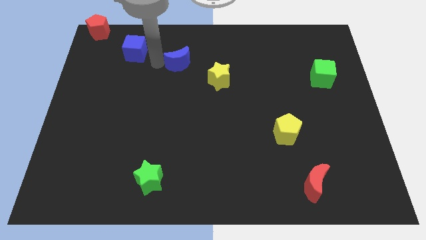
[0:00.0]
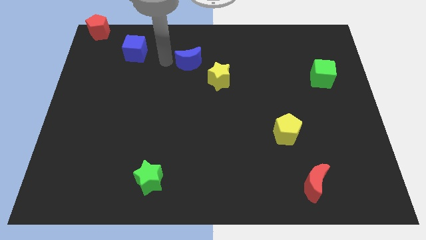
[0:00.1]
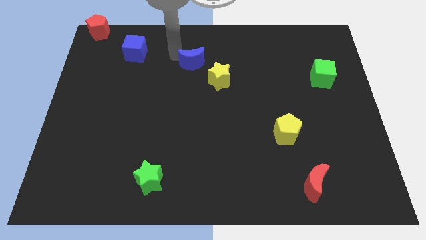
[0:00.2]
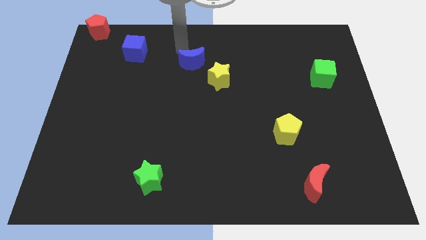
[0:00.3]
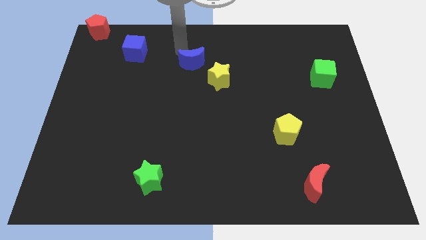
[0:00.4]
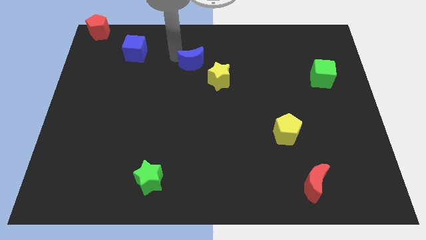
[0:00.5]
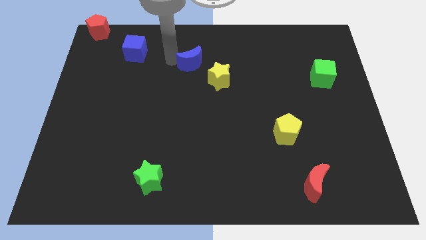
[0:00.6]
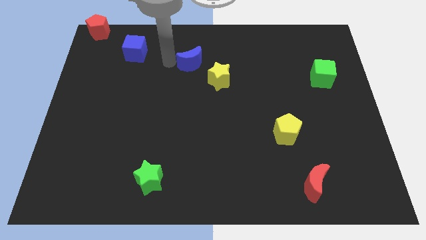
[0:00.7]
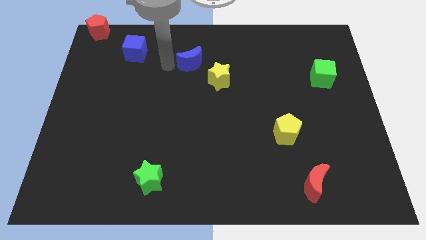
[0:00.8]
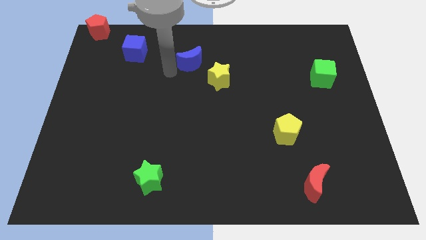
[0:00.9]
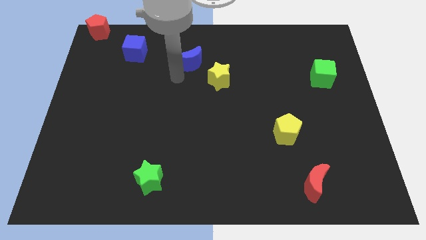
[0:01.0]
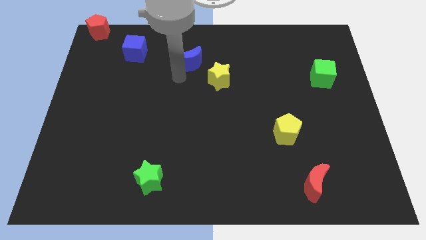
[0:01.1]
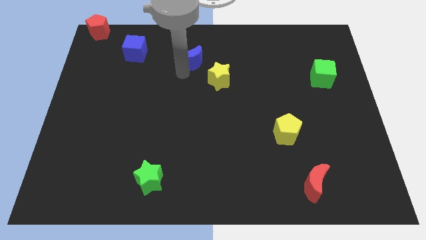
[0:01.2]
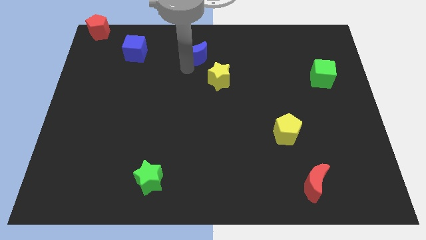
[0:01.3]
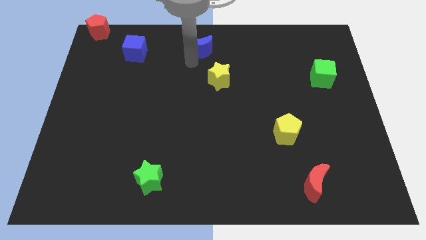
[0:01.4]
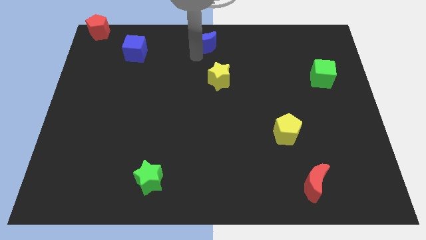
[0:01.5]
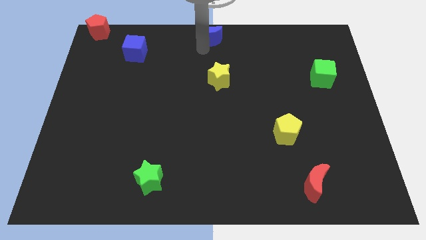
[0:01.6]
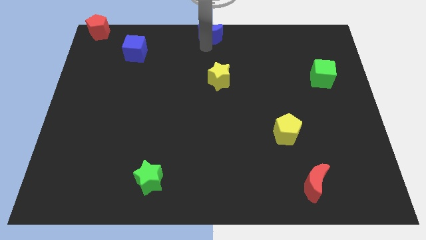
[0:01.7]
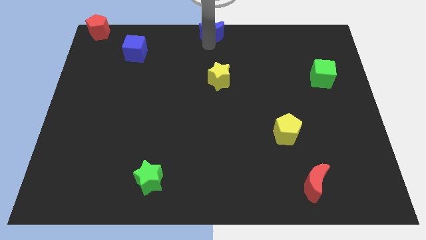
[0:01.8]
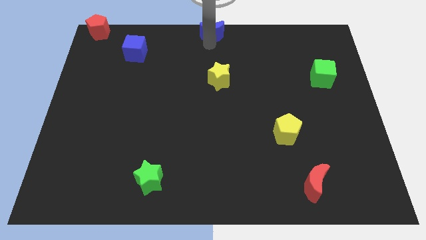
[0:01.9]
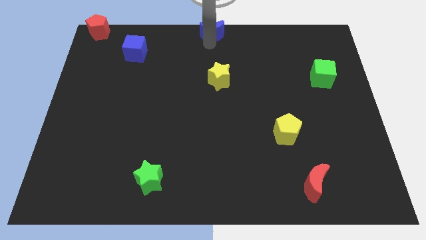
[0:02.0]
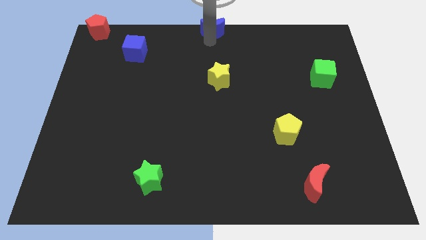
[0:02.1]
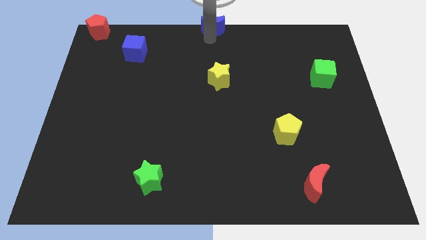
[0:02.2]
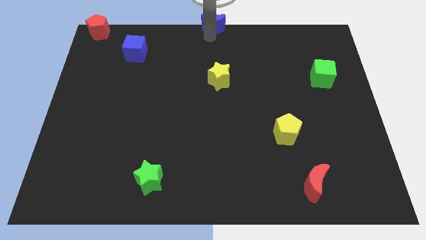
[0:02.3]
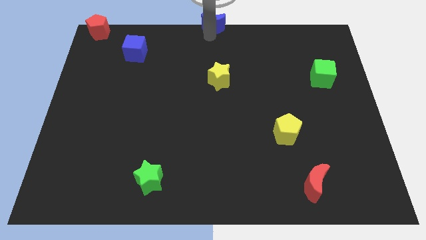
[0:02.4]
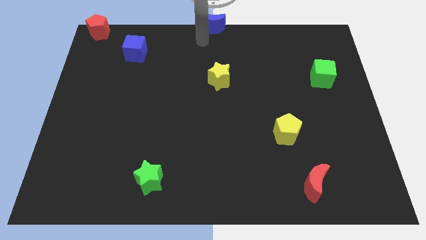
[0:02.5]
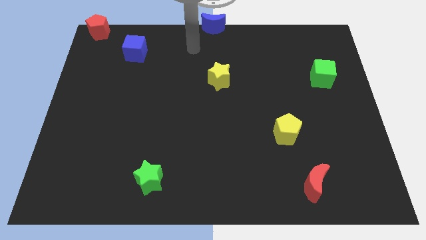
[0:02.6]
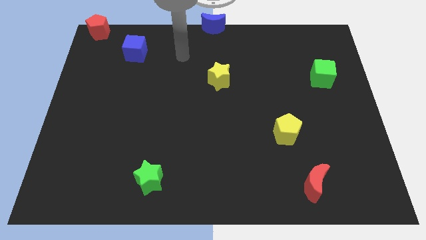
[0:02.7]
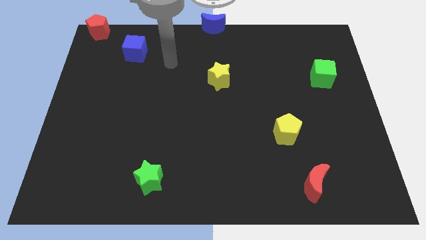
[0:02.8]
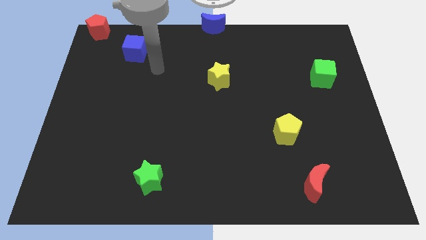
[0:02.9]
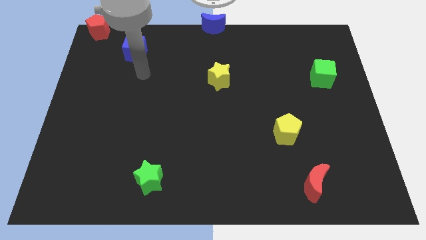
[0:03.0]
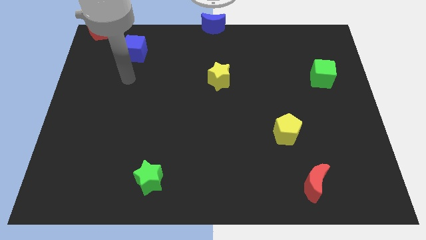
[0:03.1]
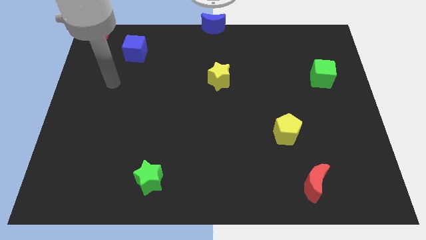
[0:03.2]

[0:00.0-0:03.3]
slide the blue moon to the top center of the board

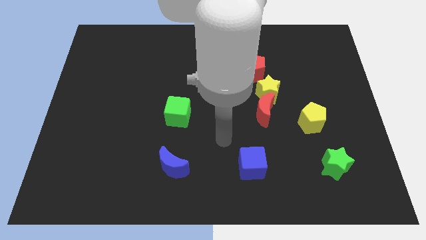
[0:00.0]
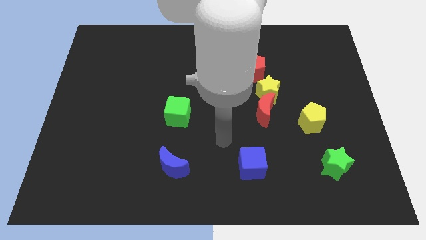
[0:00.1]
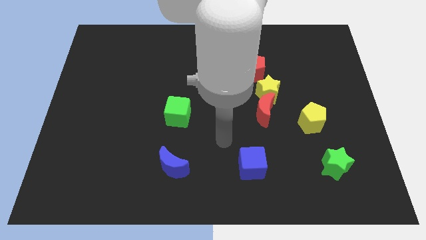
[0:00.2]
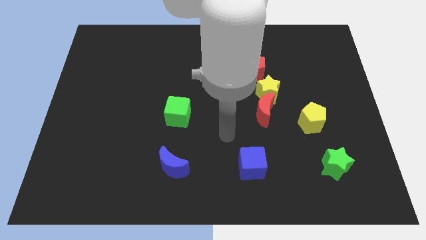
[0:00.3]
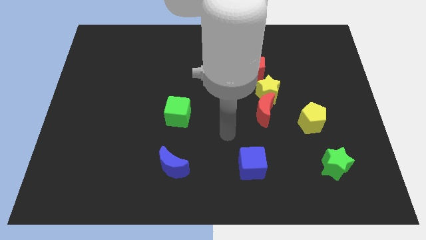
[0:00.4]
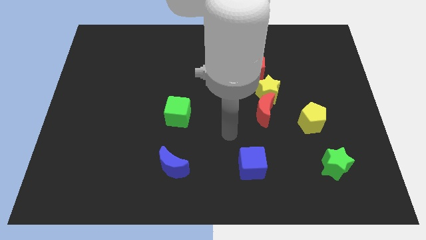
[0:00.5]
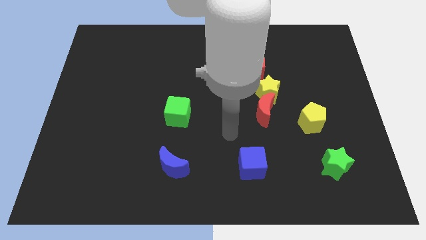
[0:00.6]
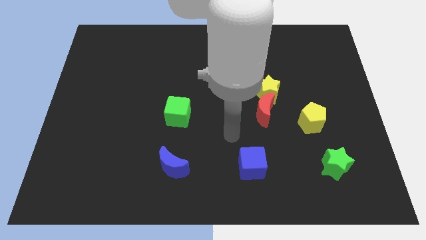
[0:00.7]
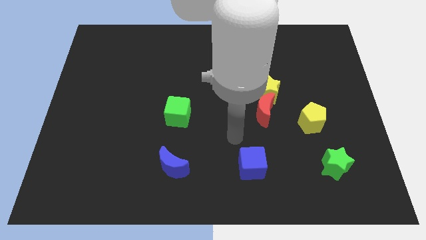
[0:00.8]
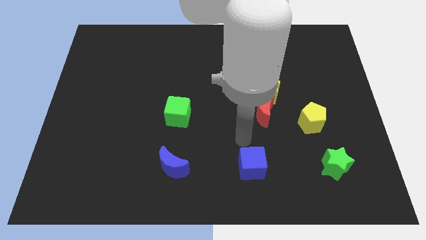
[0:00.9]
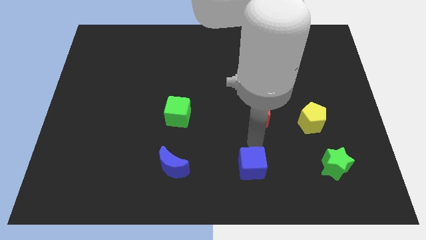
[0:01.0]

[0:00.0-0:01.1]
point the arm towards the top side of the blue cube

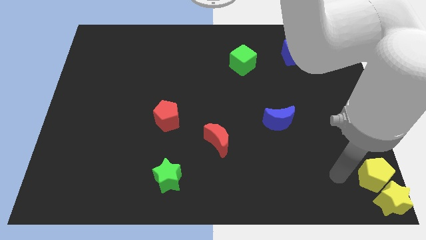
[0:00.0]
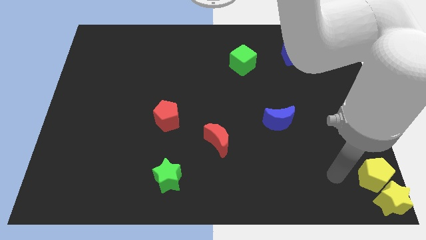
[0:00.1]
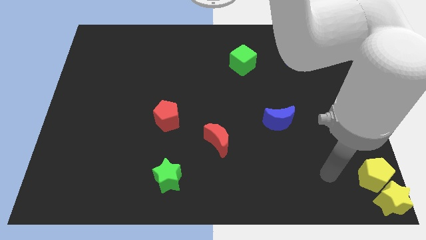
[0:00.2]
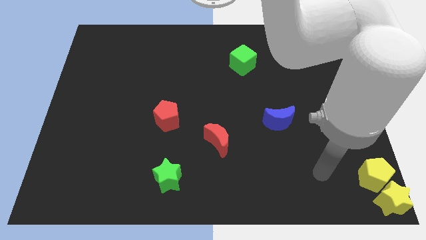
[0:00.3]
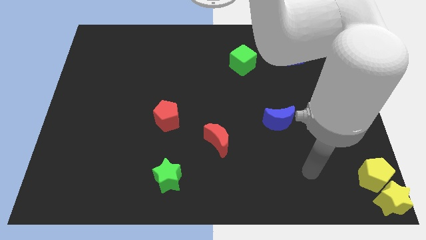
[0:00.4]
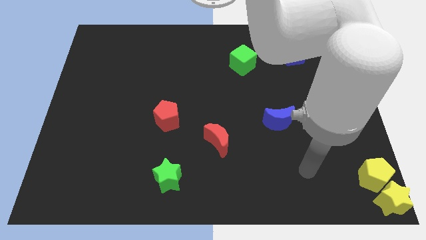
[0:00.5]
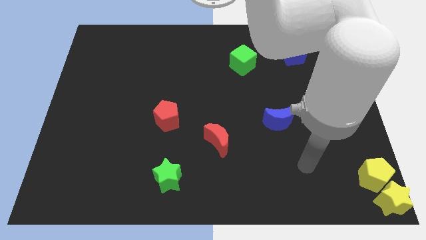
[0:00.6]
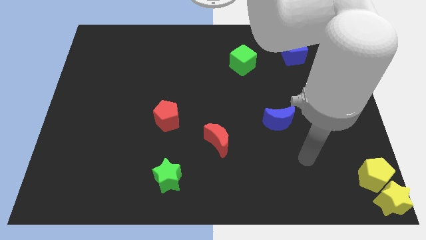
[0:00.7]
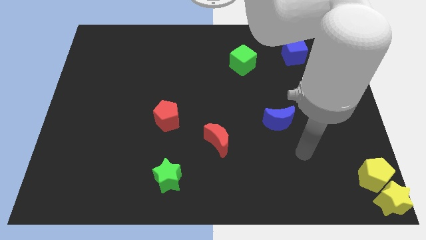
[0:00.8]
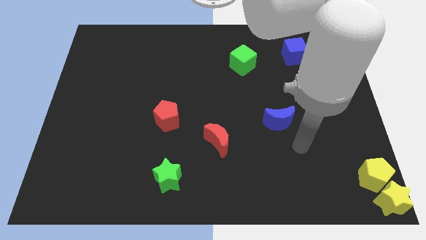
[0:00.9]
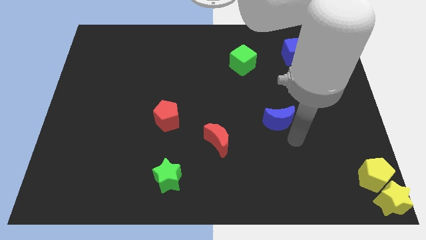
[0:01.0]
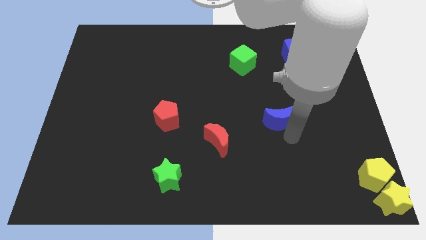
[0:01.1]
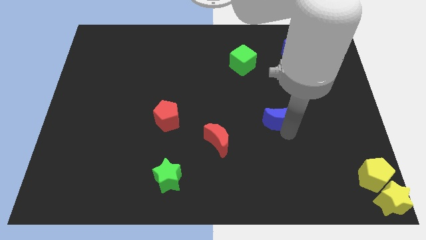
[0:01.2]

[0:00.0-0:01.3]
move your arm to the bottom of the blue moon

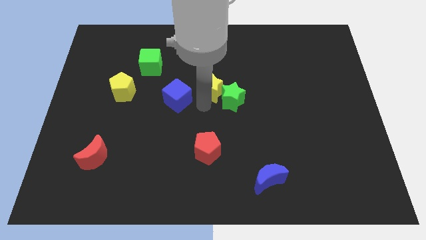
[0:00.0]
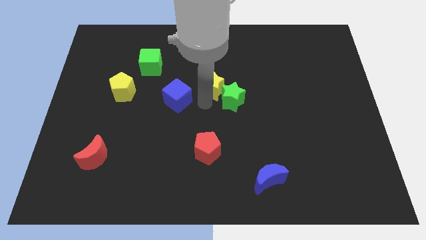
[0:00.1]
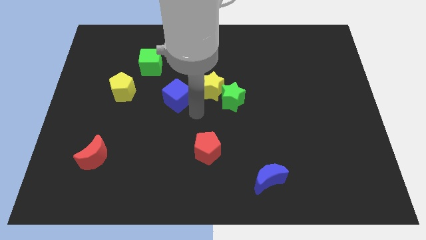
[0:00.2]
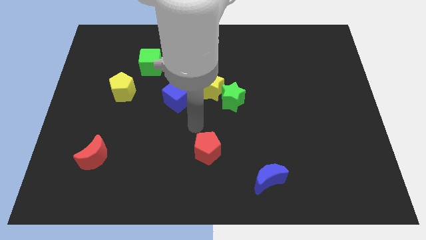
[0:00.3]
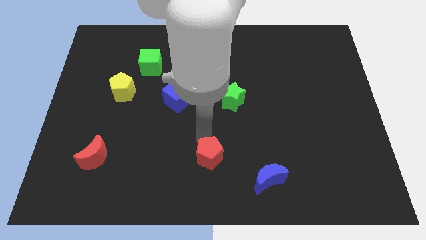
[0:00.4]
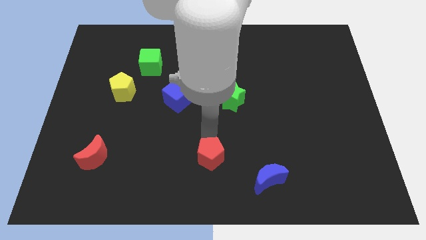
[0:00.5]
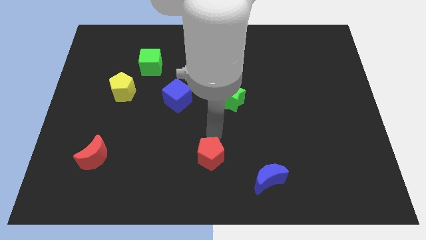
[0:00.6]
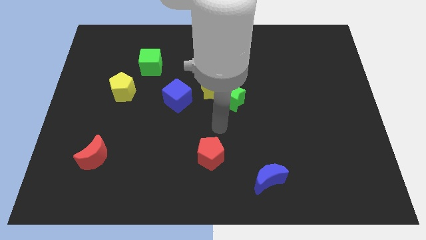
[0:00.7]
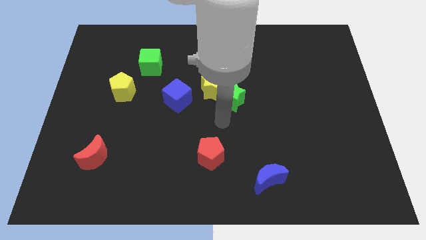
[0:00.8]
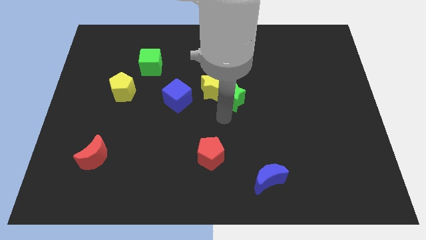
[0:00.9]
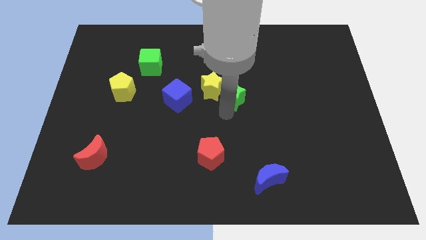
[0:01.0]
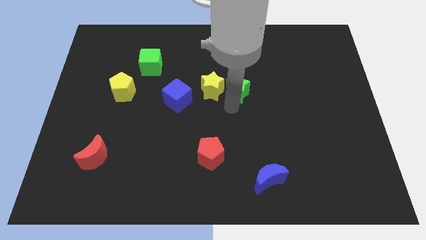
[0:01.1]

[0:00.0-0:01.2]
touch the top side of the red pentagon

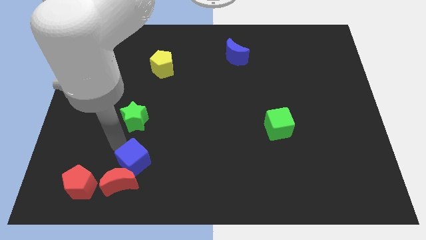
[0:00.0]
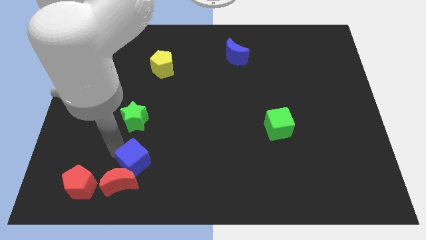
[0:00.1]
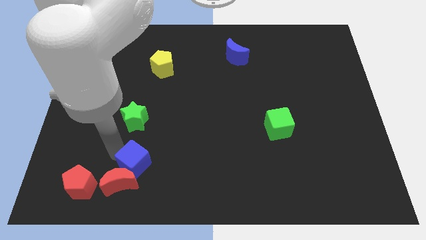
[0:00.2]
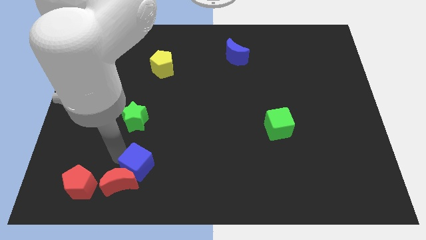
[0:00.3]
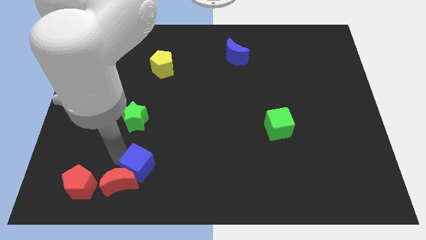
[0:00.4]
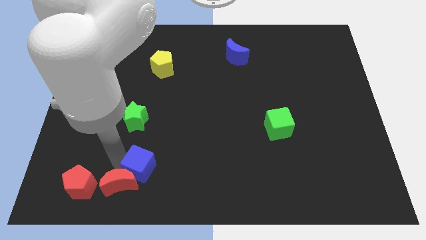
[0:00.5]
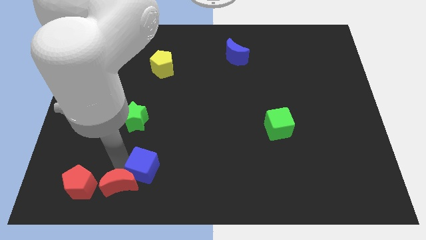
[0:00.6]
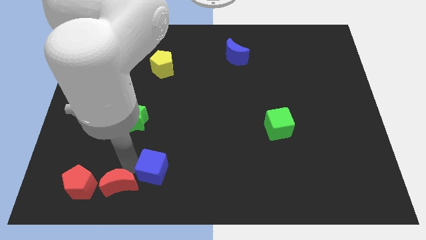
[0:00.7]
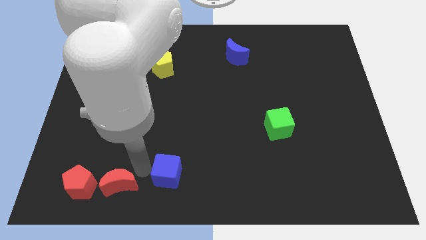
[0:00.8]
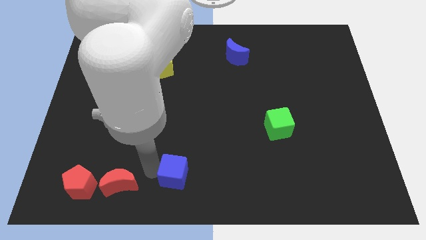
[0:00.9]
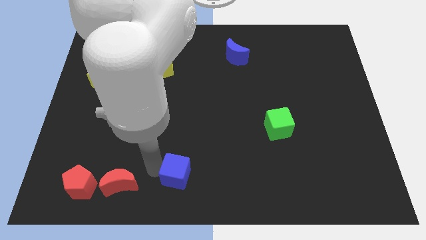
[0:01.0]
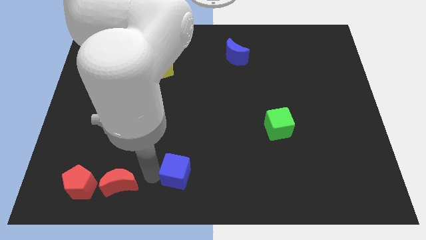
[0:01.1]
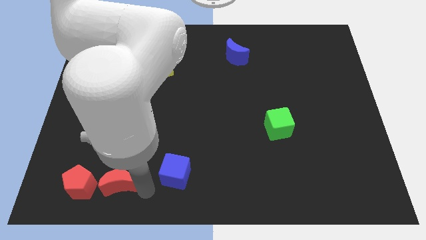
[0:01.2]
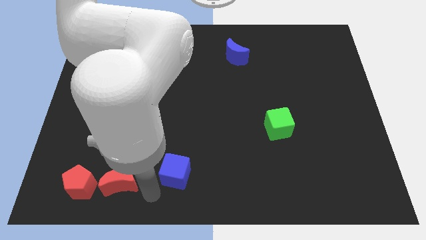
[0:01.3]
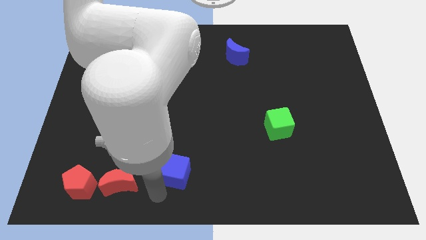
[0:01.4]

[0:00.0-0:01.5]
move the blue cube to the right of the red crescent

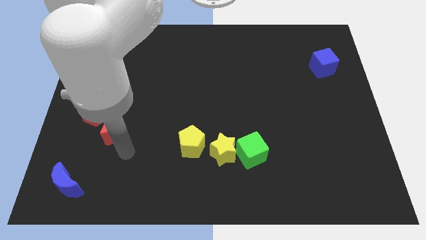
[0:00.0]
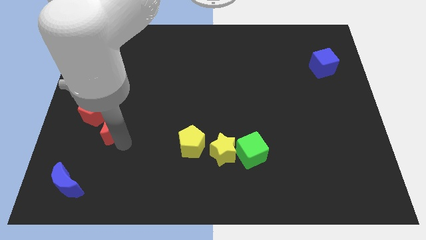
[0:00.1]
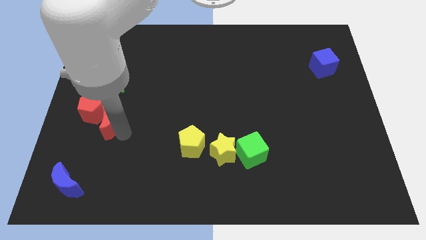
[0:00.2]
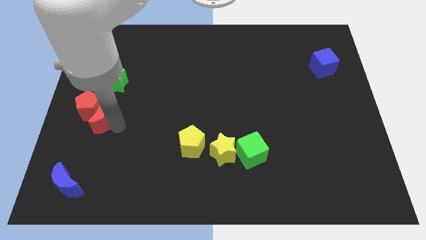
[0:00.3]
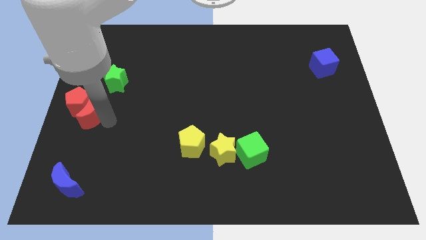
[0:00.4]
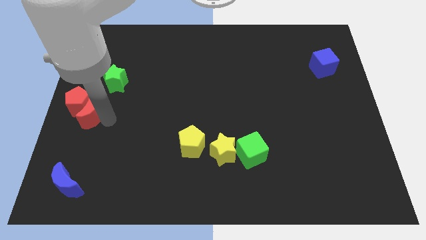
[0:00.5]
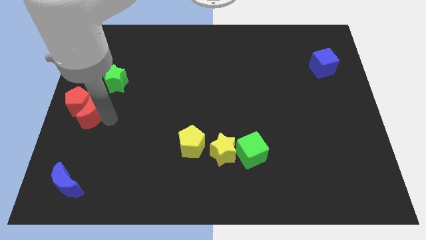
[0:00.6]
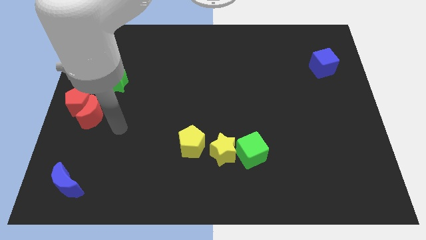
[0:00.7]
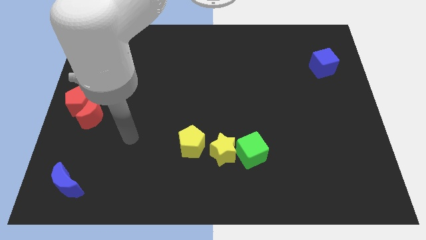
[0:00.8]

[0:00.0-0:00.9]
push red crescent in to red pentagon
